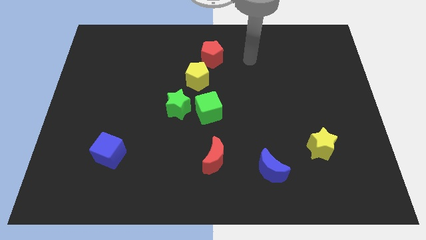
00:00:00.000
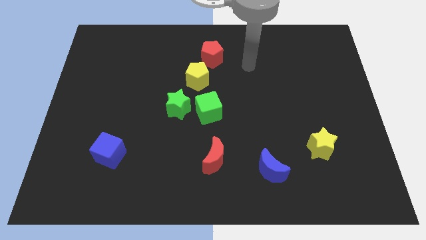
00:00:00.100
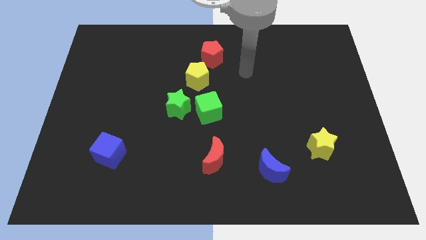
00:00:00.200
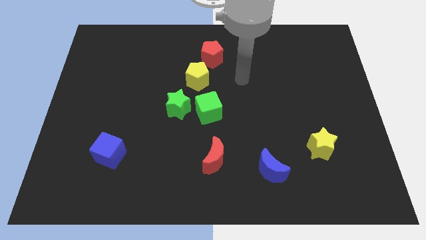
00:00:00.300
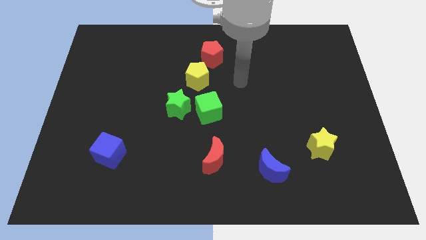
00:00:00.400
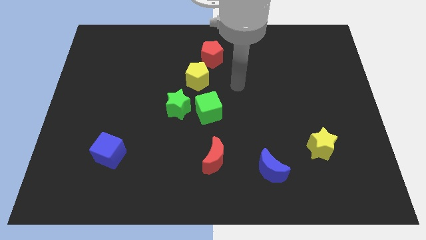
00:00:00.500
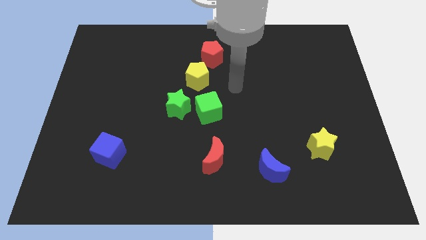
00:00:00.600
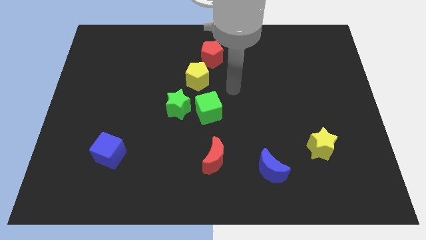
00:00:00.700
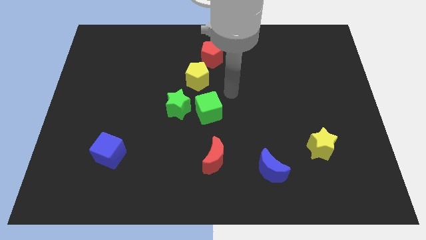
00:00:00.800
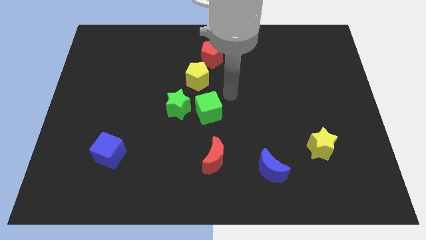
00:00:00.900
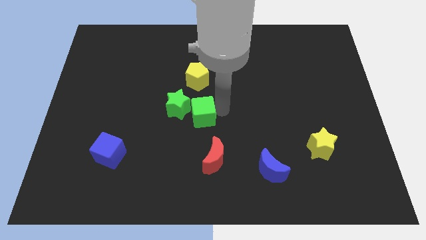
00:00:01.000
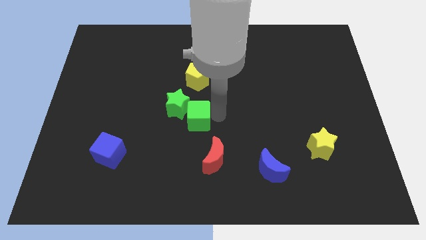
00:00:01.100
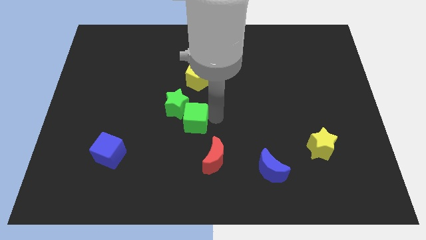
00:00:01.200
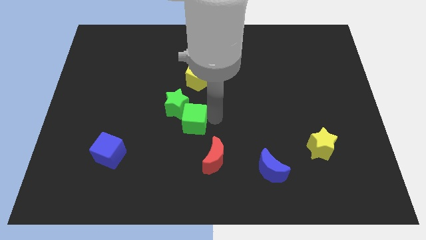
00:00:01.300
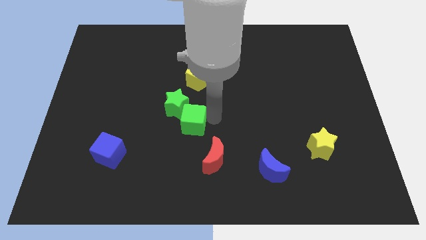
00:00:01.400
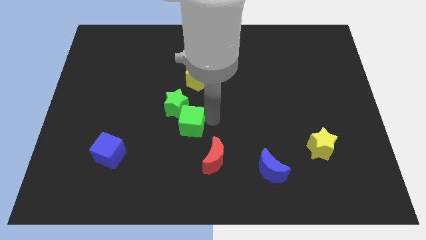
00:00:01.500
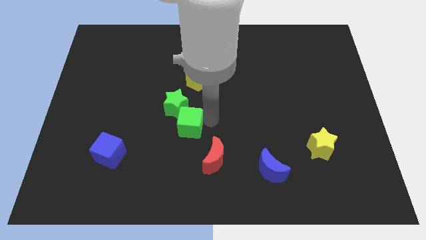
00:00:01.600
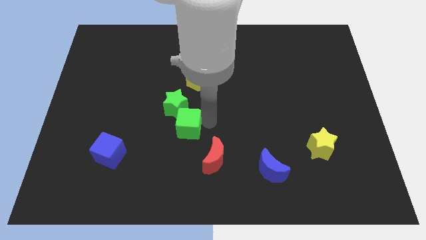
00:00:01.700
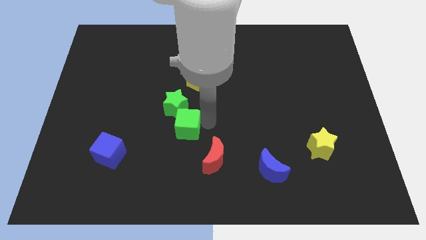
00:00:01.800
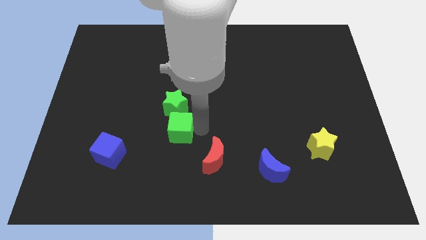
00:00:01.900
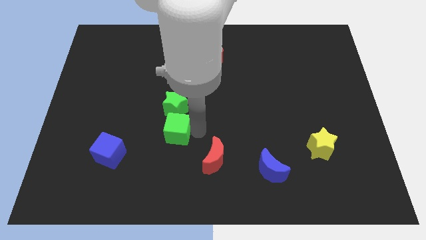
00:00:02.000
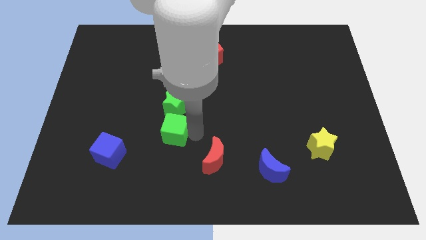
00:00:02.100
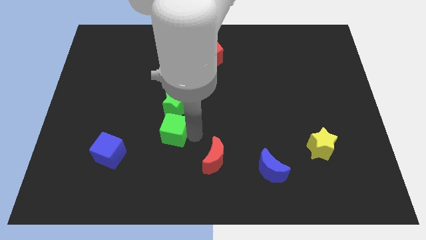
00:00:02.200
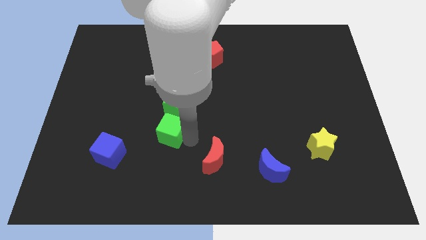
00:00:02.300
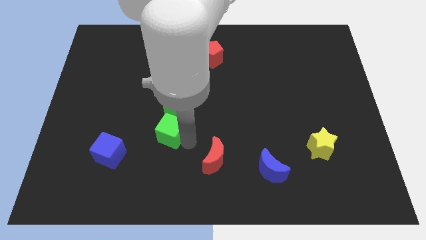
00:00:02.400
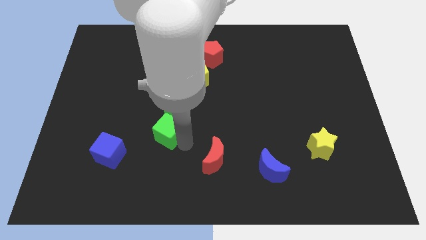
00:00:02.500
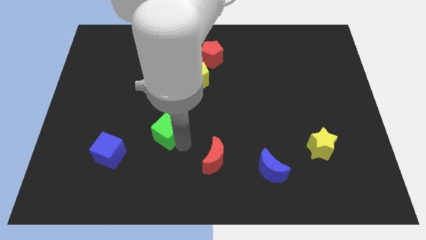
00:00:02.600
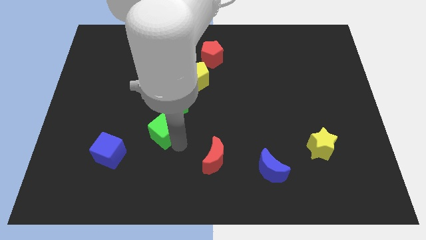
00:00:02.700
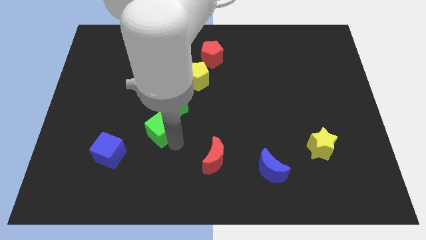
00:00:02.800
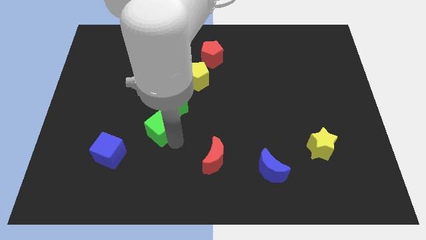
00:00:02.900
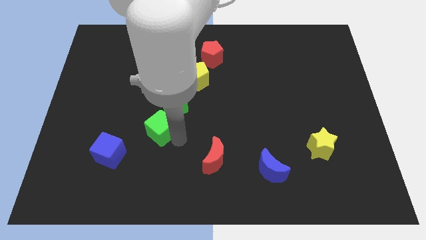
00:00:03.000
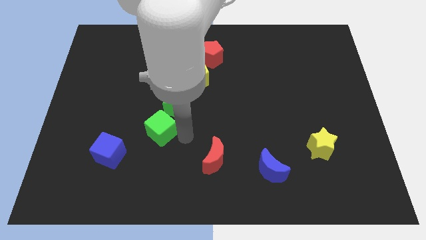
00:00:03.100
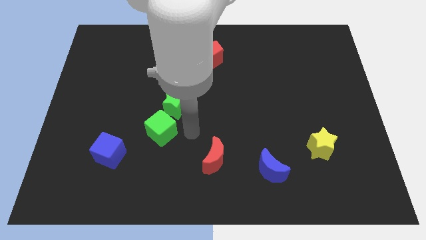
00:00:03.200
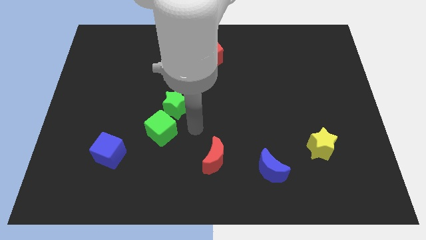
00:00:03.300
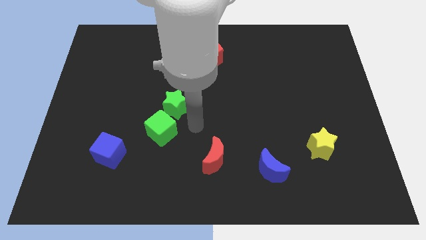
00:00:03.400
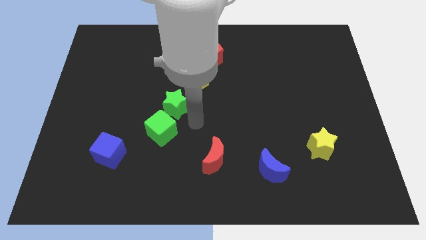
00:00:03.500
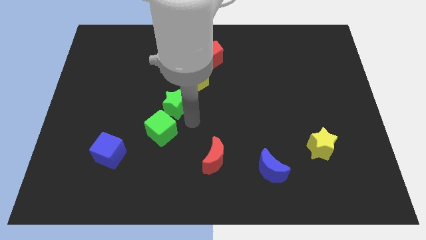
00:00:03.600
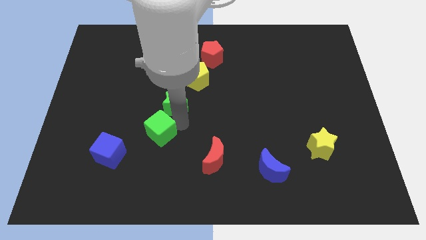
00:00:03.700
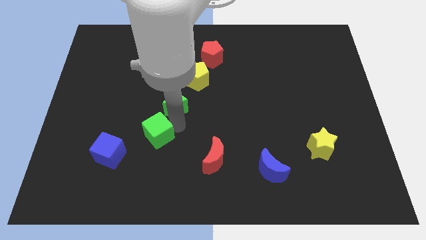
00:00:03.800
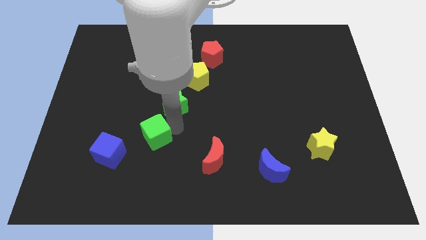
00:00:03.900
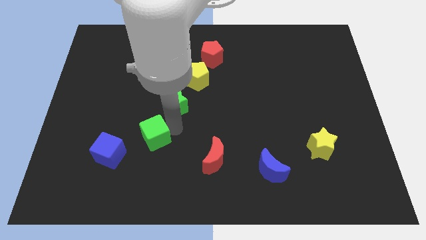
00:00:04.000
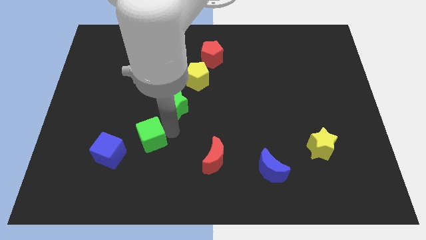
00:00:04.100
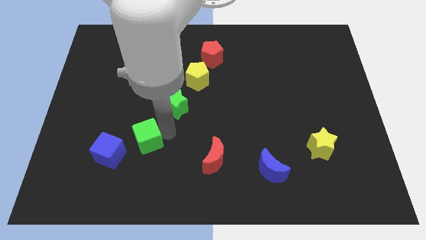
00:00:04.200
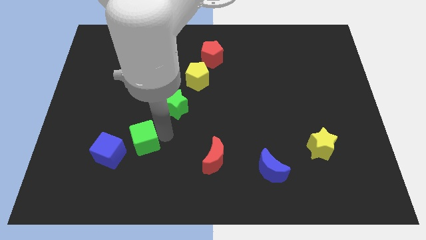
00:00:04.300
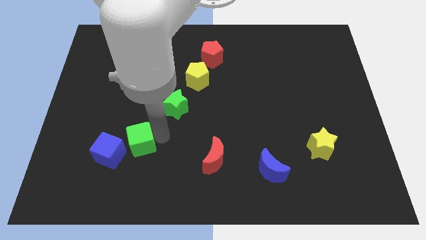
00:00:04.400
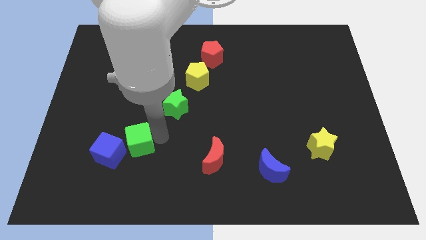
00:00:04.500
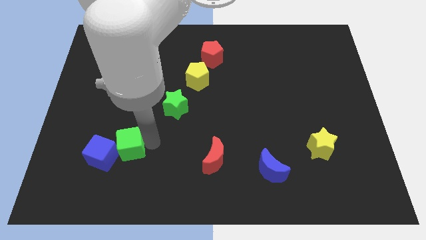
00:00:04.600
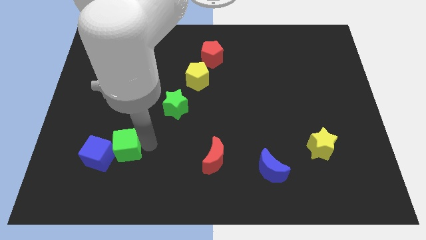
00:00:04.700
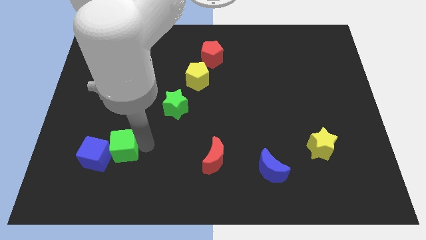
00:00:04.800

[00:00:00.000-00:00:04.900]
move the green cube towards the blue cube

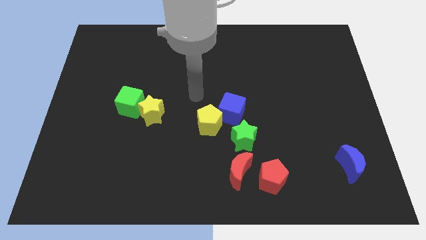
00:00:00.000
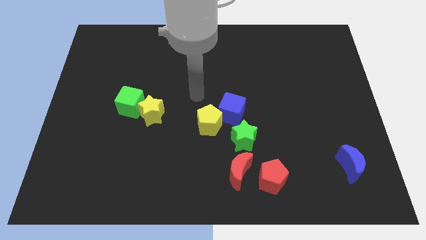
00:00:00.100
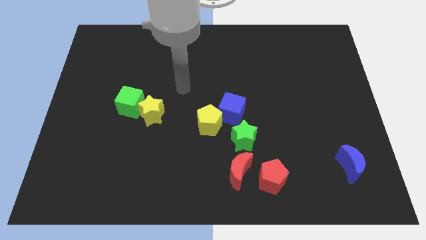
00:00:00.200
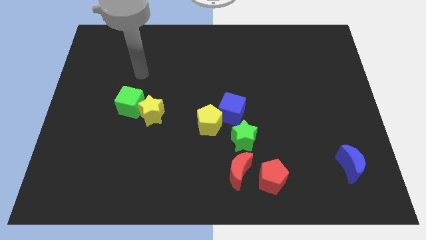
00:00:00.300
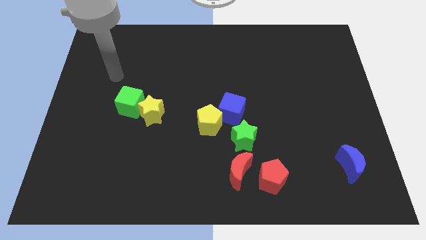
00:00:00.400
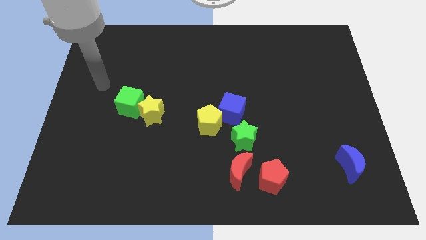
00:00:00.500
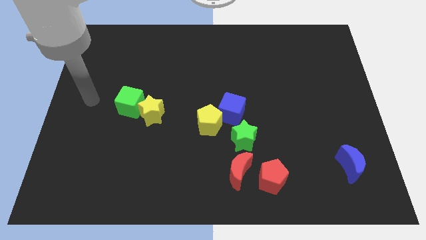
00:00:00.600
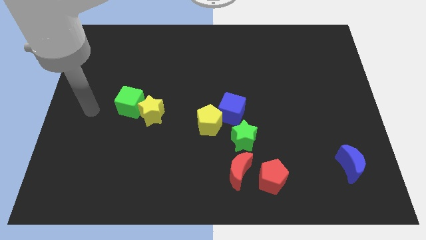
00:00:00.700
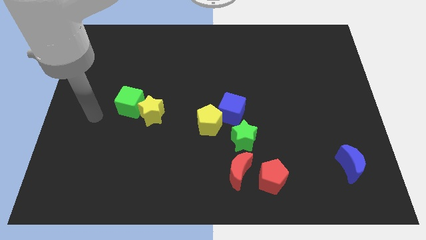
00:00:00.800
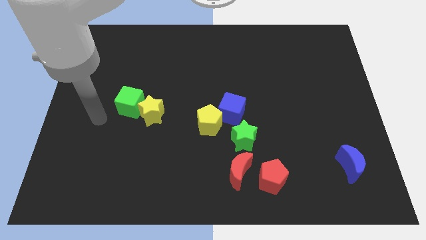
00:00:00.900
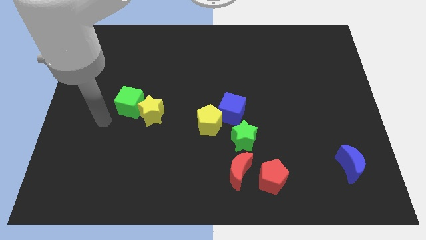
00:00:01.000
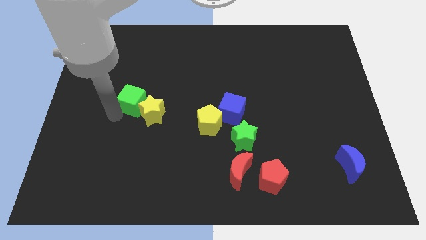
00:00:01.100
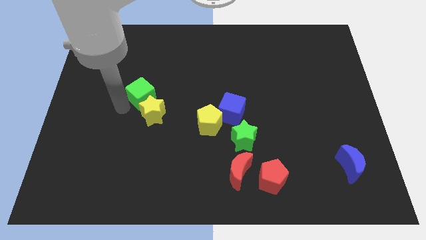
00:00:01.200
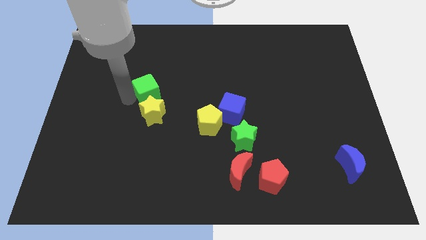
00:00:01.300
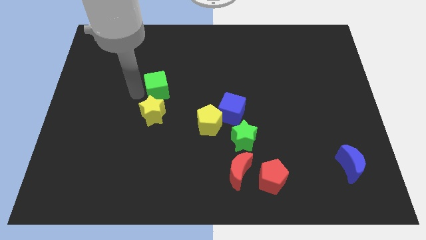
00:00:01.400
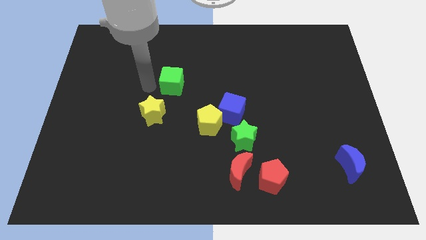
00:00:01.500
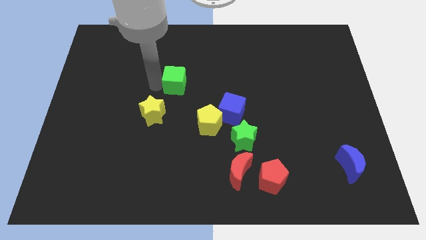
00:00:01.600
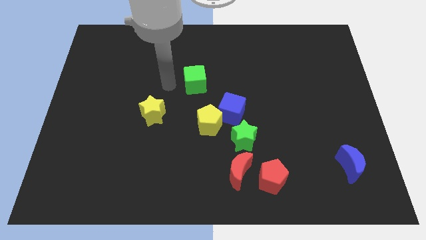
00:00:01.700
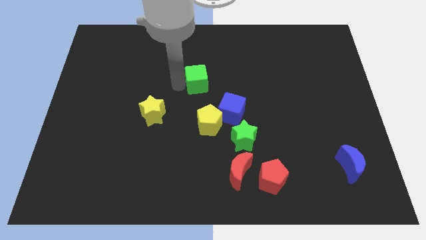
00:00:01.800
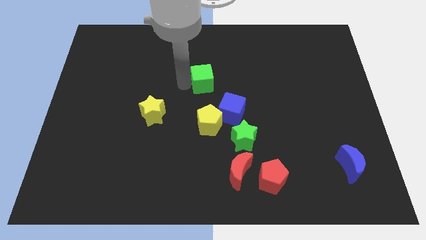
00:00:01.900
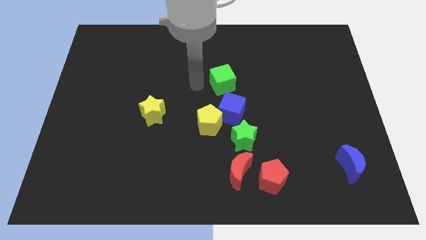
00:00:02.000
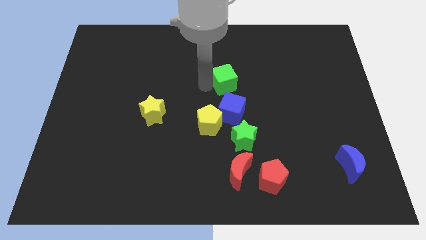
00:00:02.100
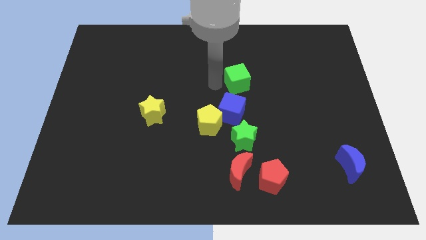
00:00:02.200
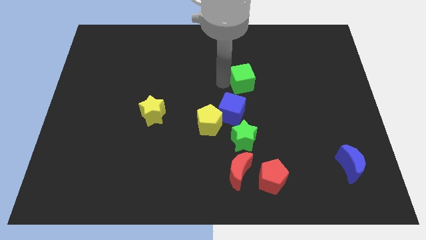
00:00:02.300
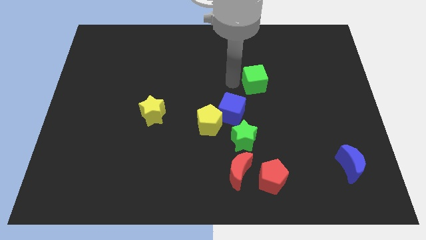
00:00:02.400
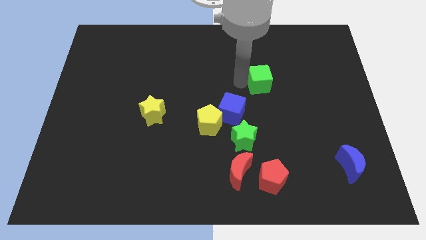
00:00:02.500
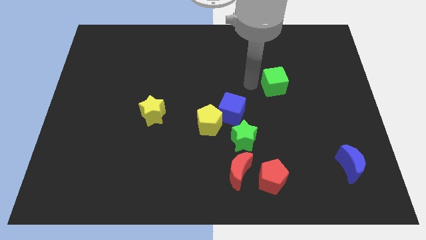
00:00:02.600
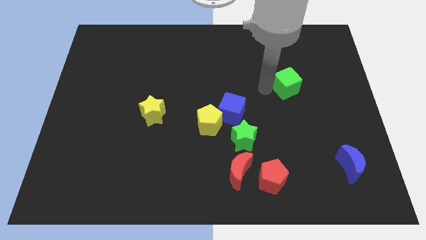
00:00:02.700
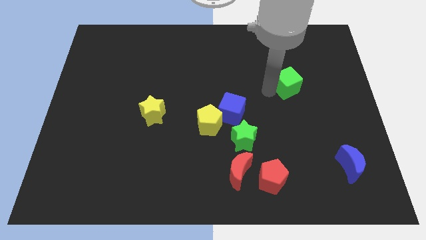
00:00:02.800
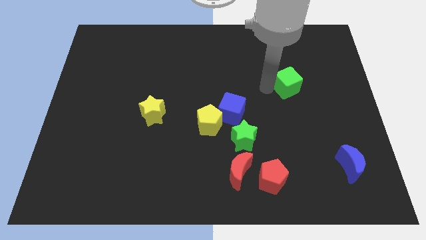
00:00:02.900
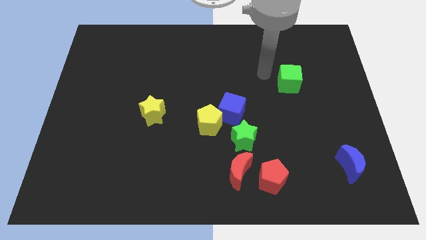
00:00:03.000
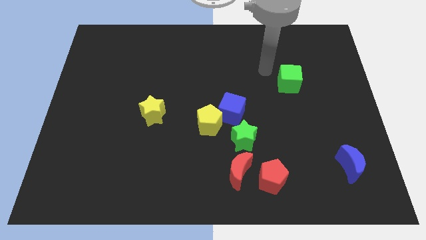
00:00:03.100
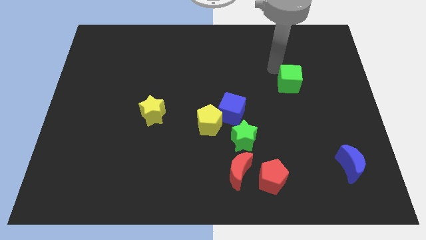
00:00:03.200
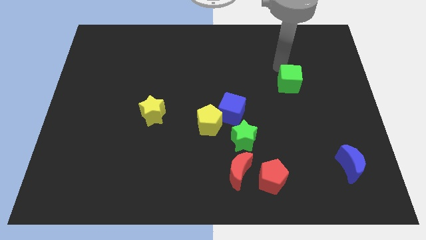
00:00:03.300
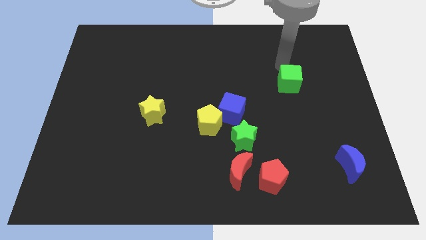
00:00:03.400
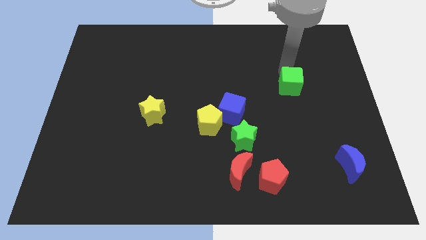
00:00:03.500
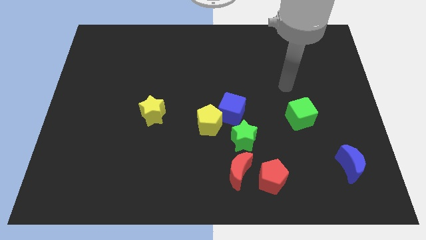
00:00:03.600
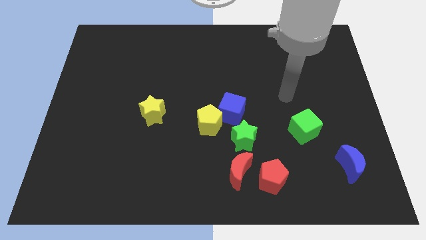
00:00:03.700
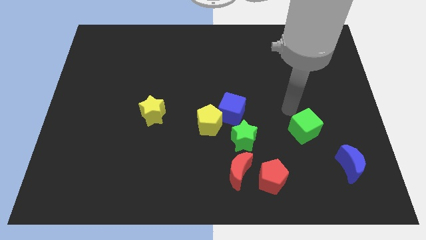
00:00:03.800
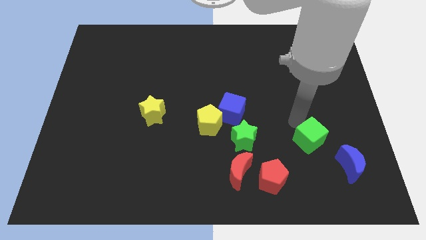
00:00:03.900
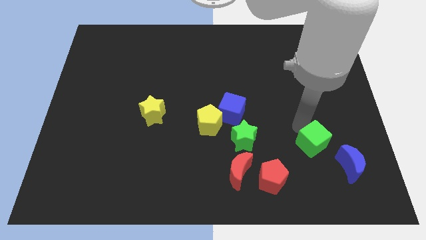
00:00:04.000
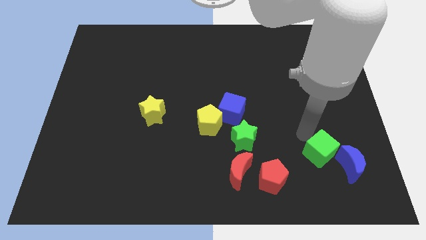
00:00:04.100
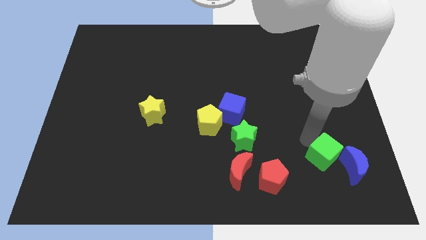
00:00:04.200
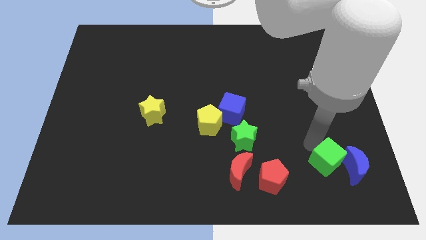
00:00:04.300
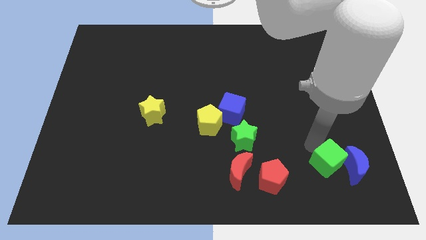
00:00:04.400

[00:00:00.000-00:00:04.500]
put the green cube to the blue moon
